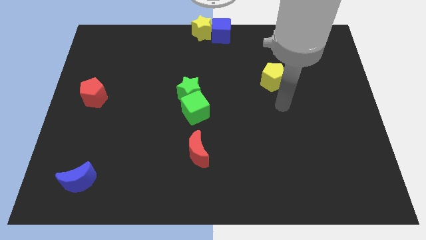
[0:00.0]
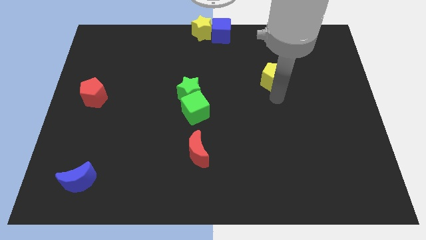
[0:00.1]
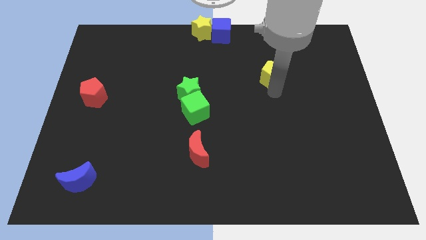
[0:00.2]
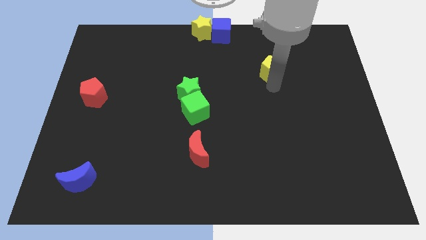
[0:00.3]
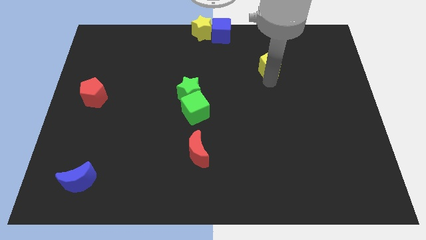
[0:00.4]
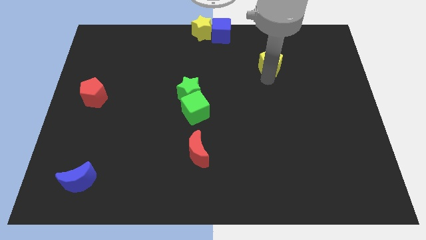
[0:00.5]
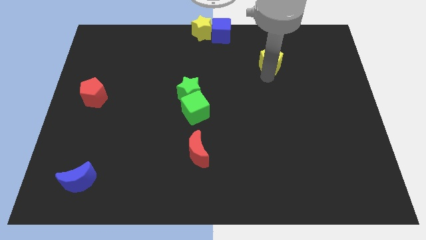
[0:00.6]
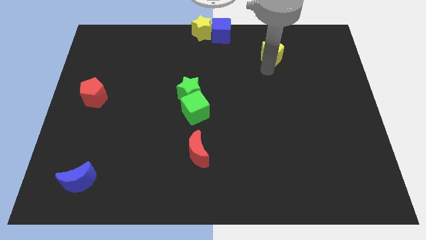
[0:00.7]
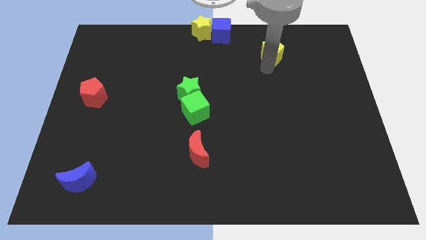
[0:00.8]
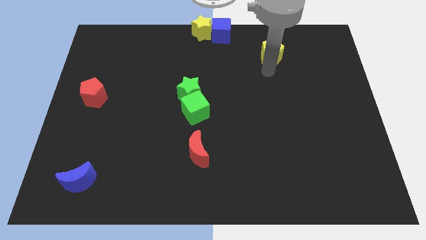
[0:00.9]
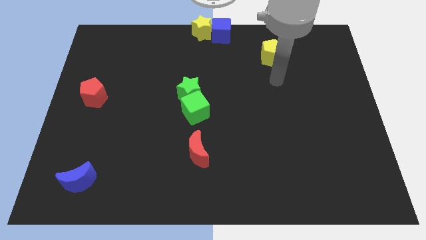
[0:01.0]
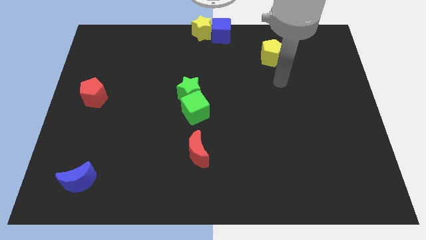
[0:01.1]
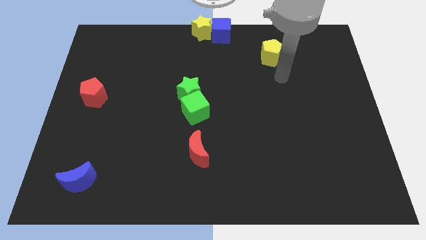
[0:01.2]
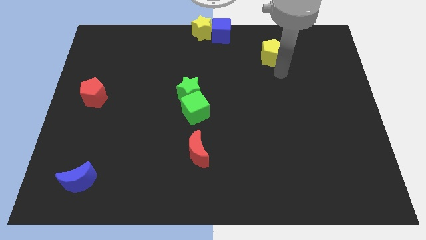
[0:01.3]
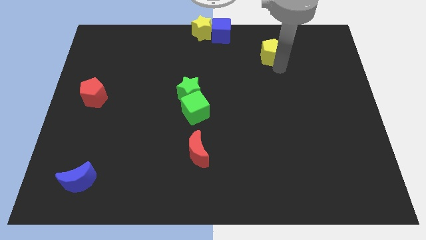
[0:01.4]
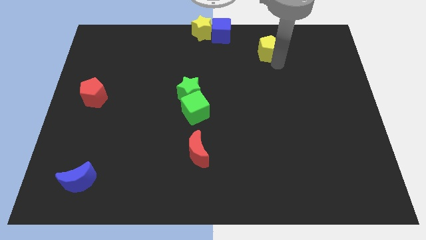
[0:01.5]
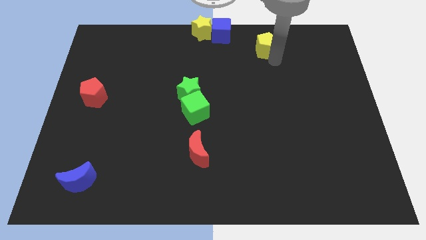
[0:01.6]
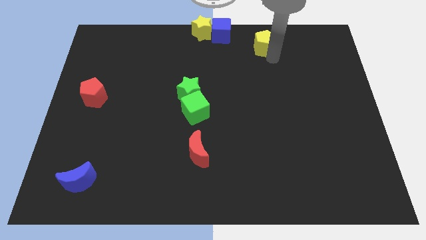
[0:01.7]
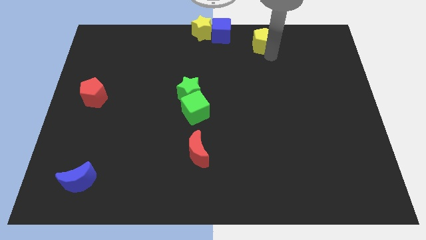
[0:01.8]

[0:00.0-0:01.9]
push the yellow pentagon to the top side

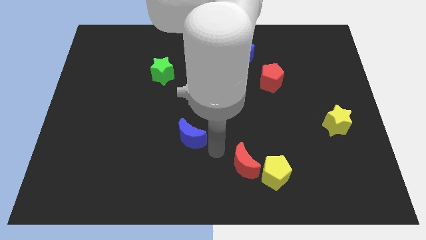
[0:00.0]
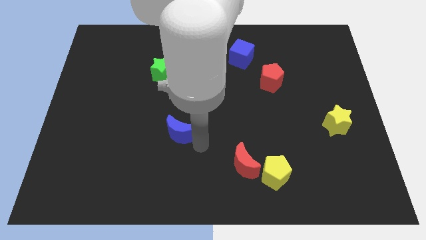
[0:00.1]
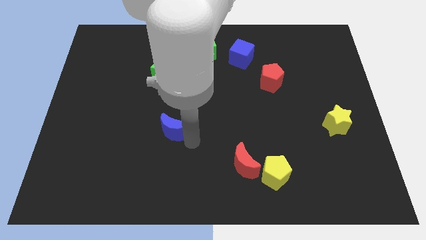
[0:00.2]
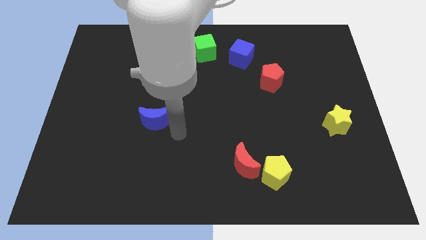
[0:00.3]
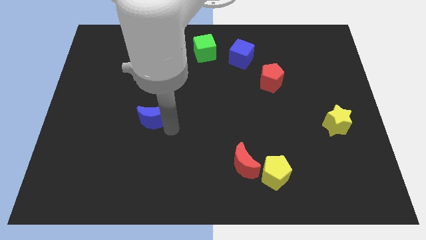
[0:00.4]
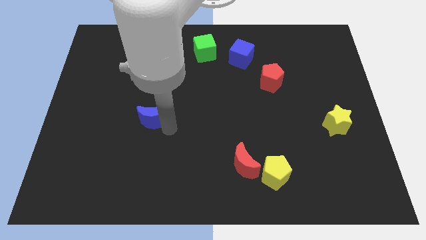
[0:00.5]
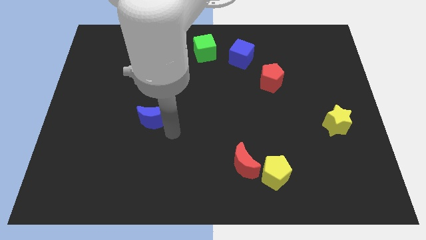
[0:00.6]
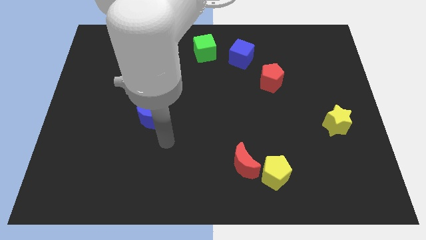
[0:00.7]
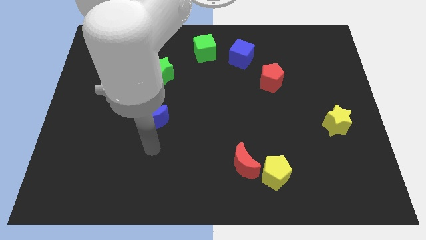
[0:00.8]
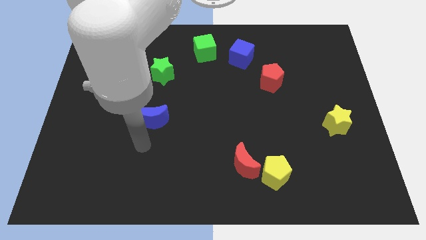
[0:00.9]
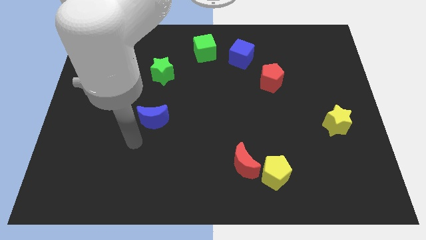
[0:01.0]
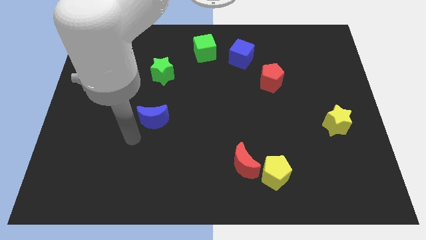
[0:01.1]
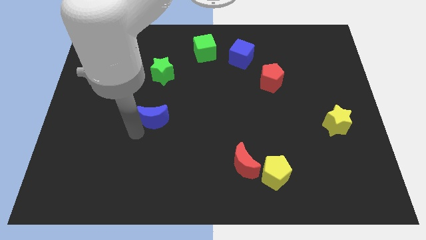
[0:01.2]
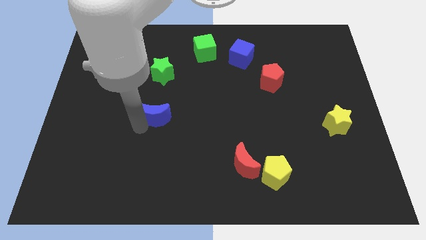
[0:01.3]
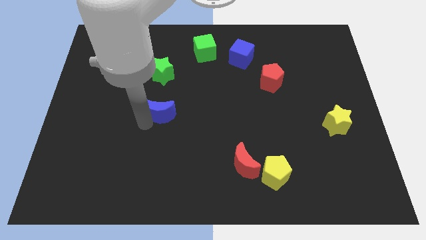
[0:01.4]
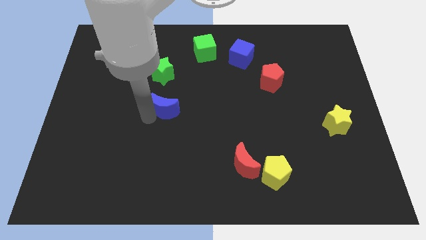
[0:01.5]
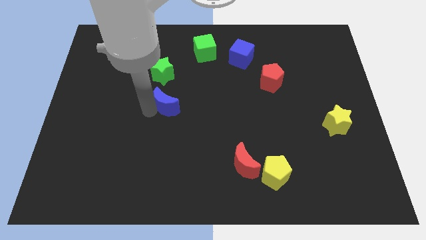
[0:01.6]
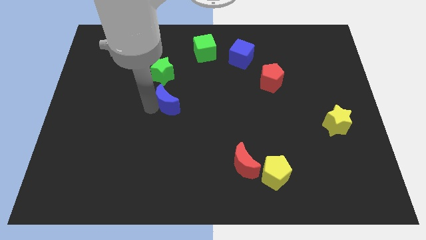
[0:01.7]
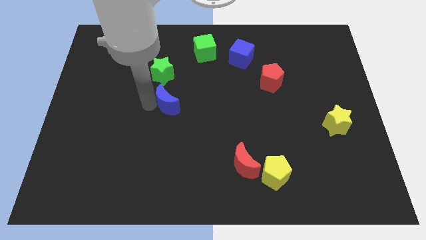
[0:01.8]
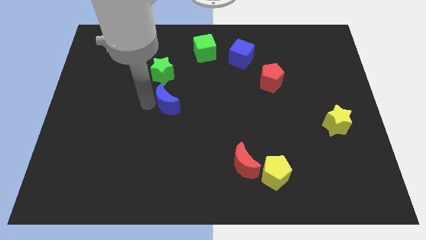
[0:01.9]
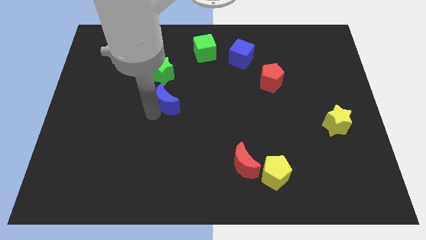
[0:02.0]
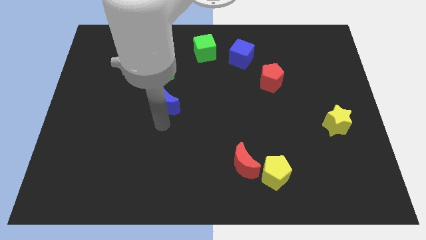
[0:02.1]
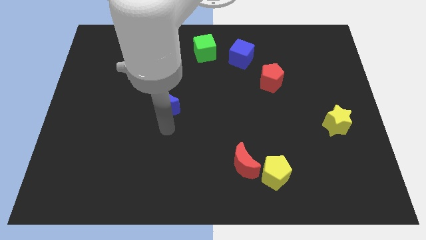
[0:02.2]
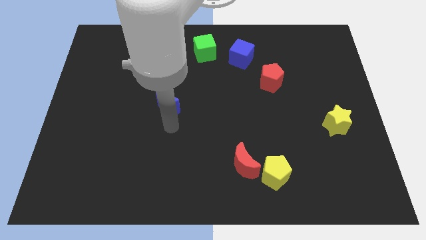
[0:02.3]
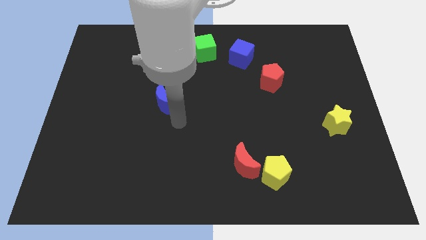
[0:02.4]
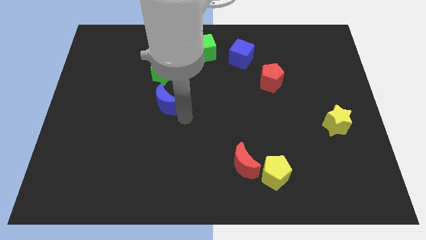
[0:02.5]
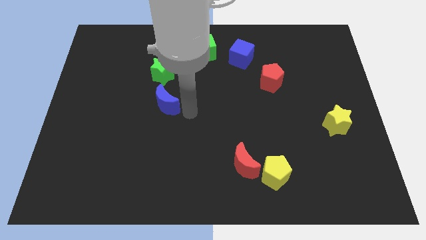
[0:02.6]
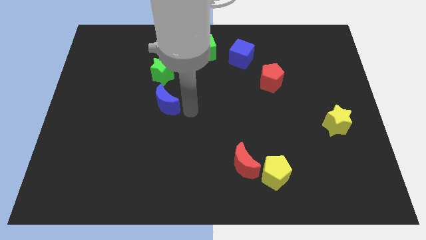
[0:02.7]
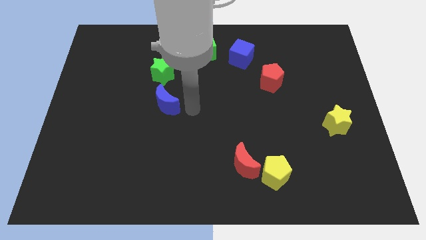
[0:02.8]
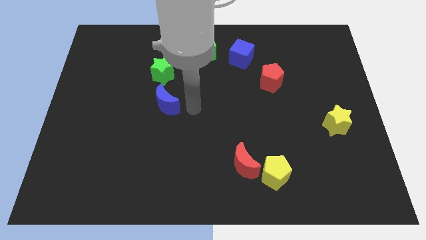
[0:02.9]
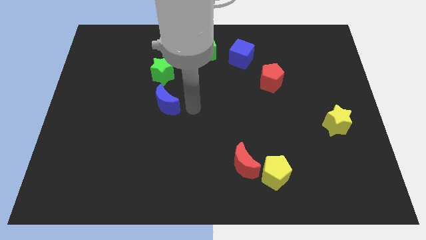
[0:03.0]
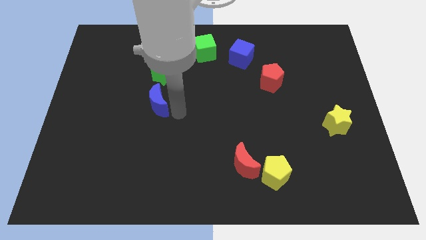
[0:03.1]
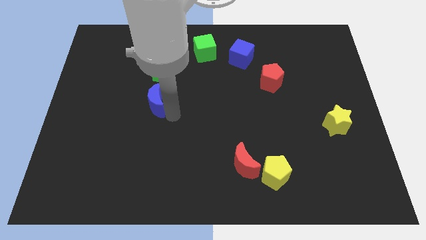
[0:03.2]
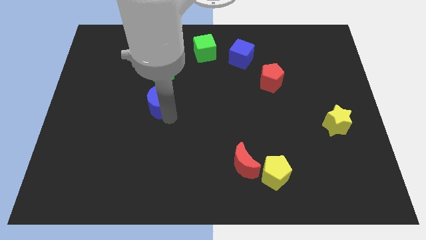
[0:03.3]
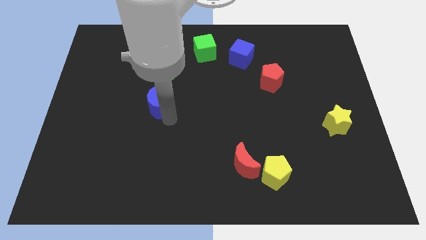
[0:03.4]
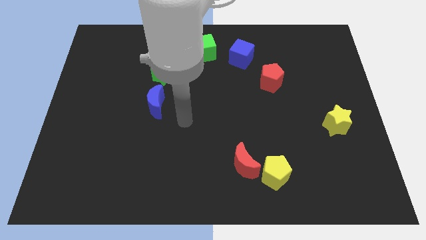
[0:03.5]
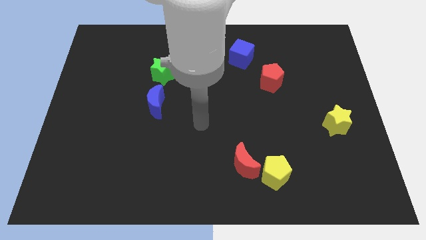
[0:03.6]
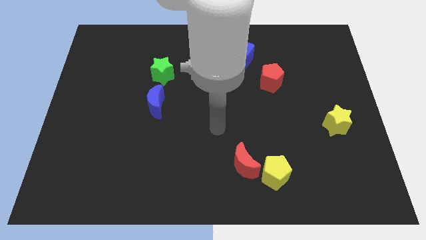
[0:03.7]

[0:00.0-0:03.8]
place the blue crescent on the bottom of green star

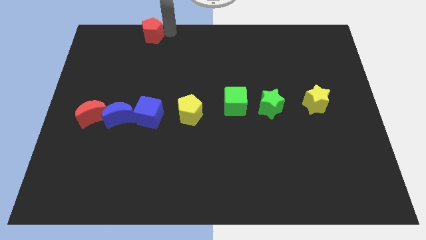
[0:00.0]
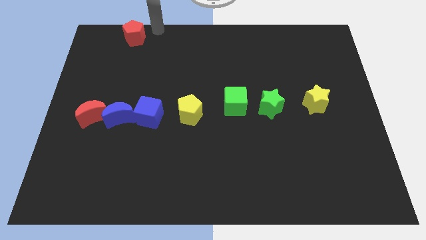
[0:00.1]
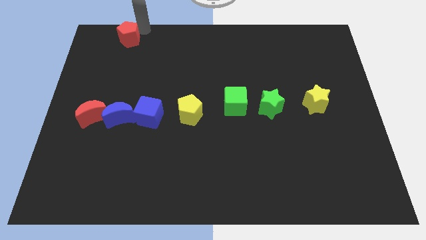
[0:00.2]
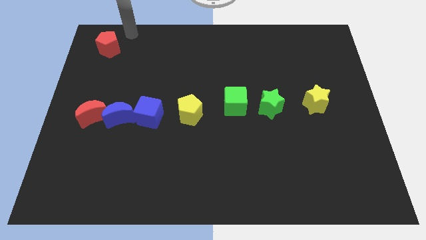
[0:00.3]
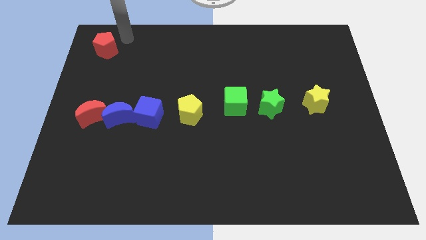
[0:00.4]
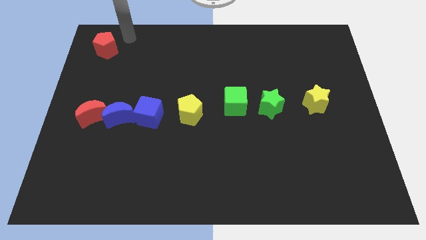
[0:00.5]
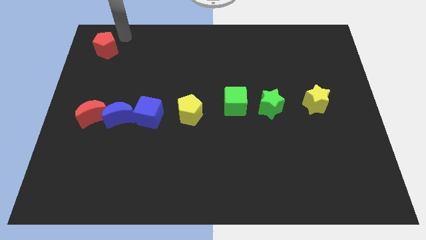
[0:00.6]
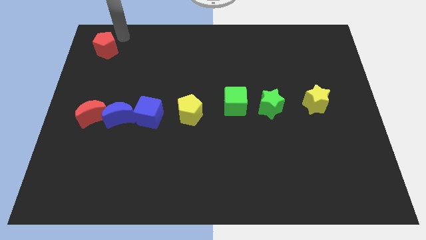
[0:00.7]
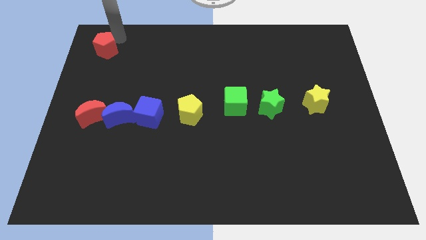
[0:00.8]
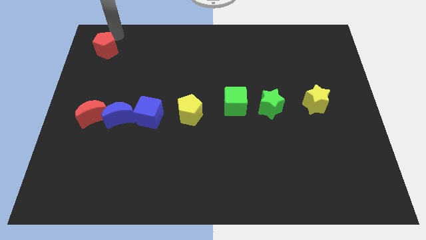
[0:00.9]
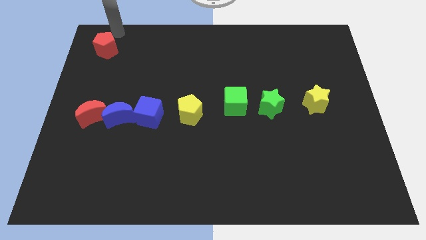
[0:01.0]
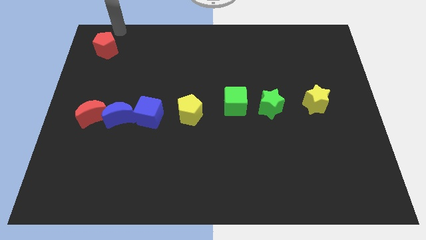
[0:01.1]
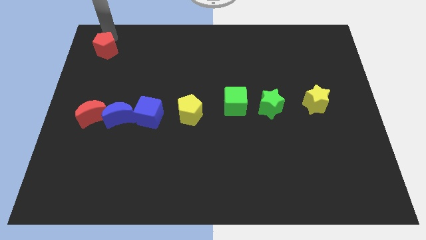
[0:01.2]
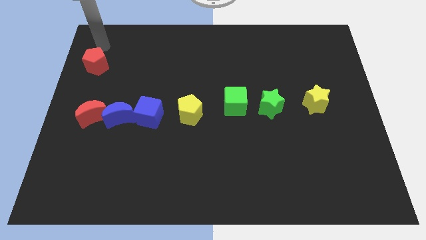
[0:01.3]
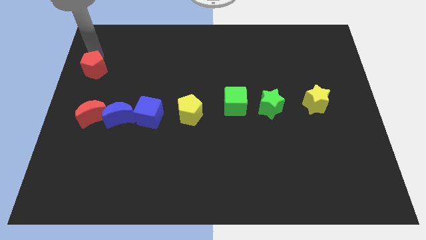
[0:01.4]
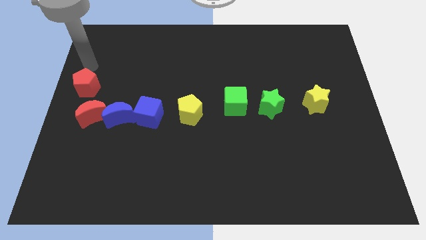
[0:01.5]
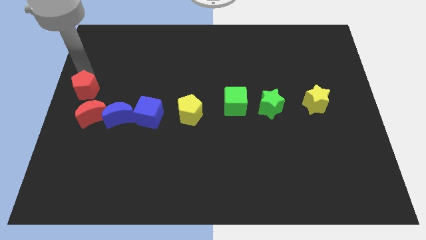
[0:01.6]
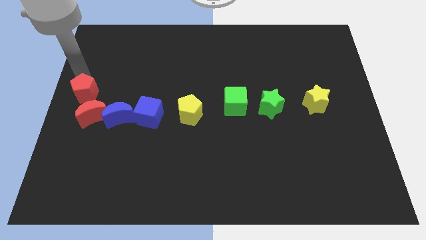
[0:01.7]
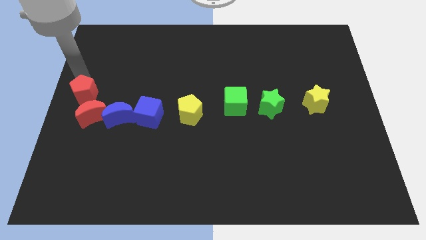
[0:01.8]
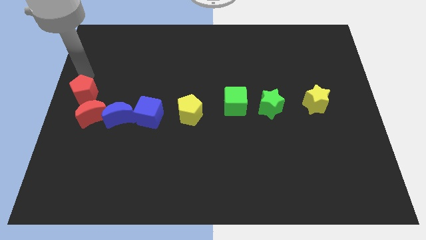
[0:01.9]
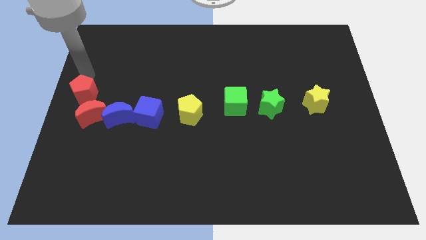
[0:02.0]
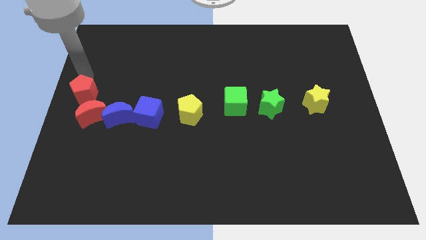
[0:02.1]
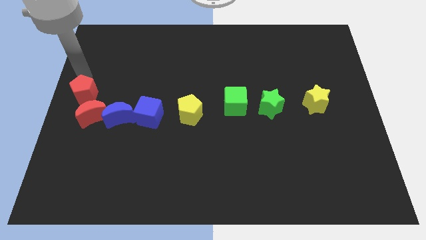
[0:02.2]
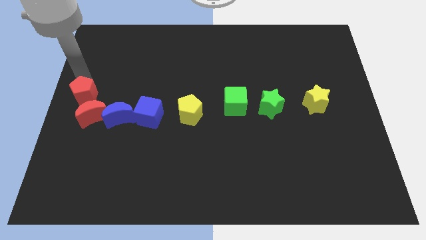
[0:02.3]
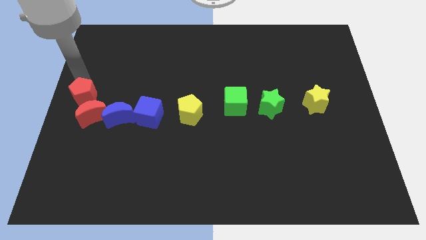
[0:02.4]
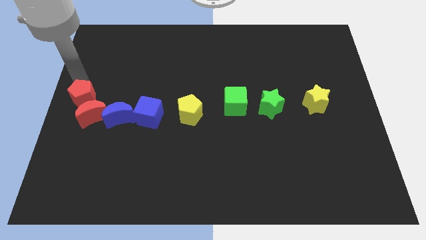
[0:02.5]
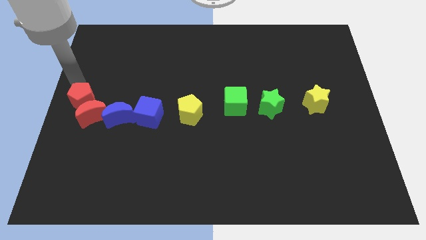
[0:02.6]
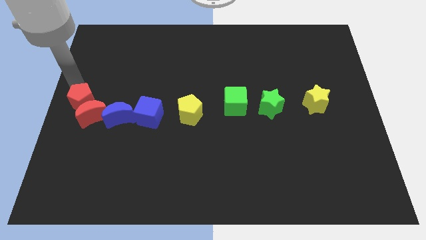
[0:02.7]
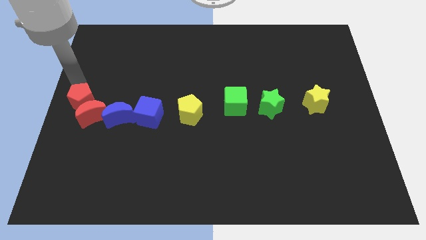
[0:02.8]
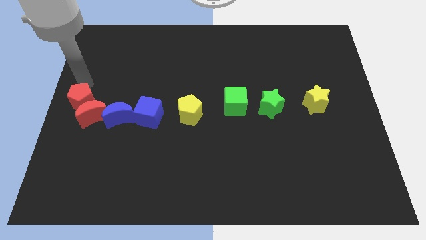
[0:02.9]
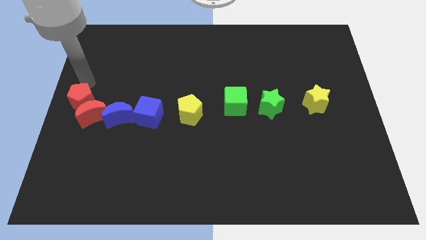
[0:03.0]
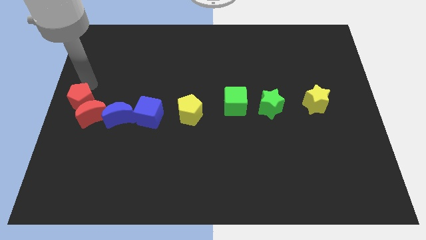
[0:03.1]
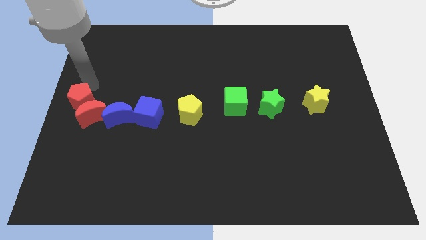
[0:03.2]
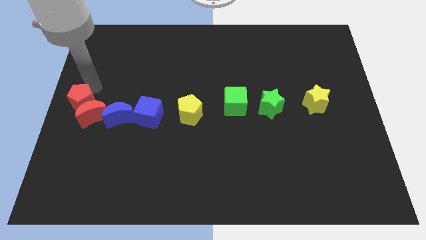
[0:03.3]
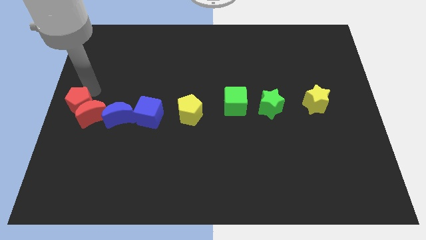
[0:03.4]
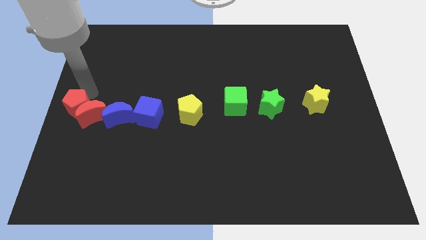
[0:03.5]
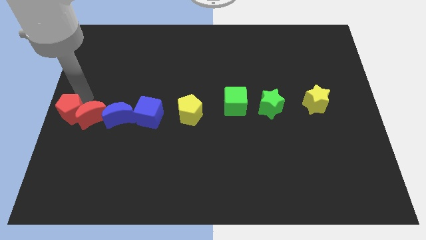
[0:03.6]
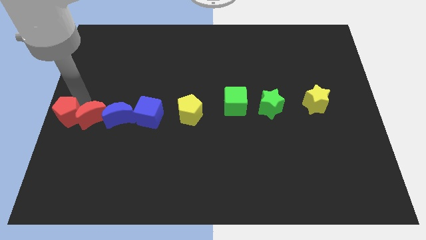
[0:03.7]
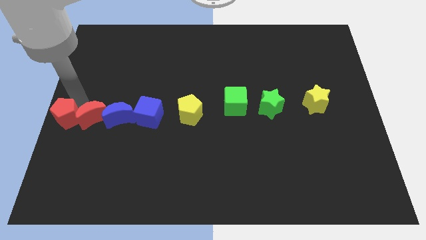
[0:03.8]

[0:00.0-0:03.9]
move red pentagon to the left of red moon
